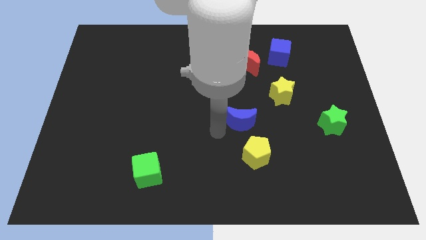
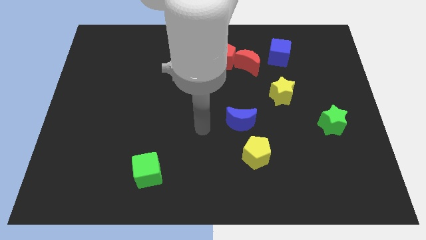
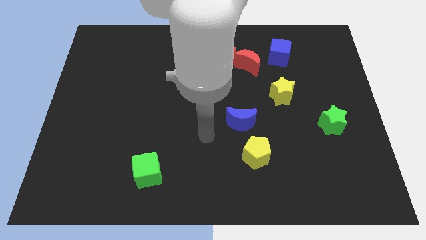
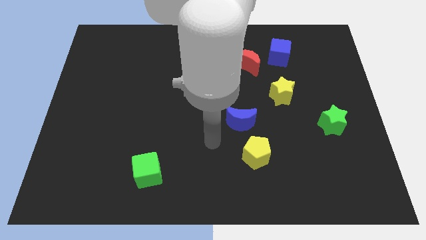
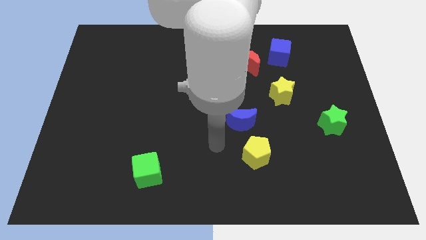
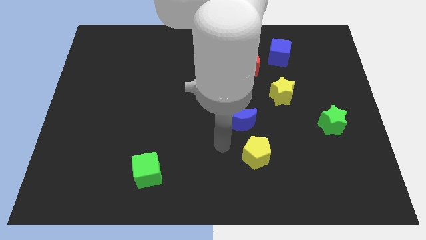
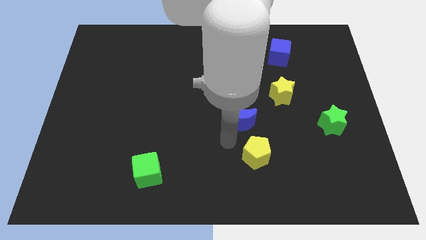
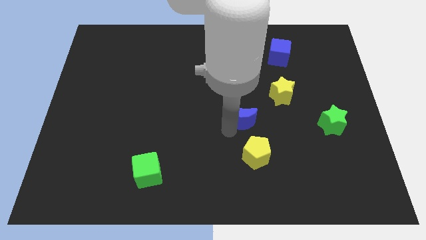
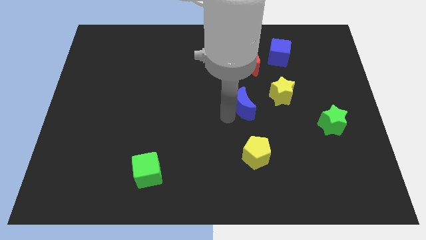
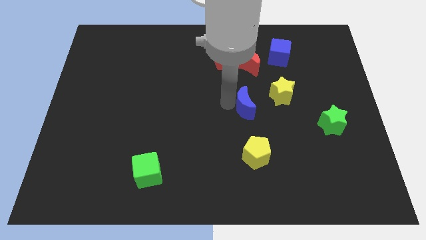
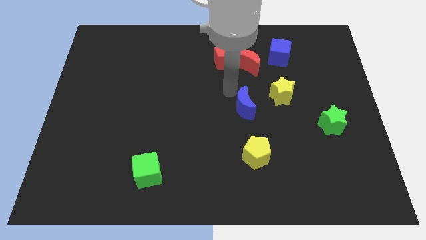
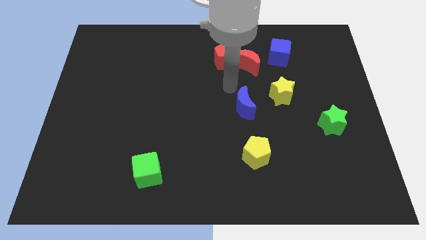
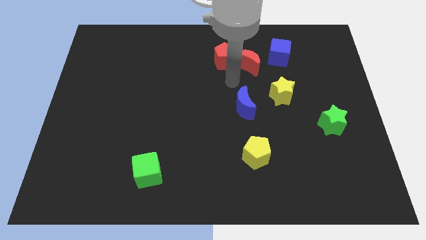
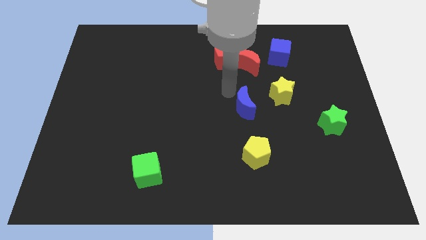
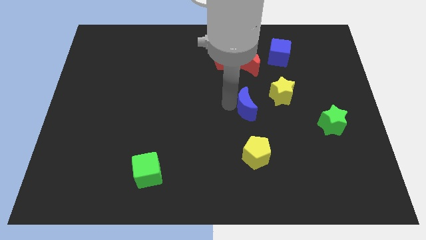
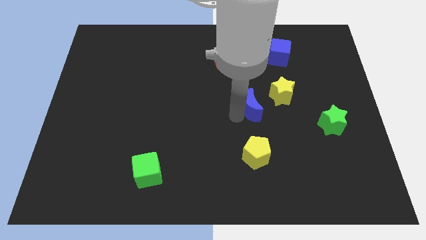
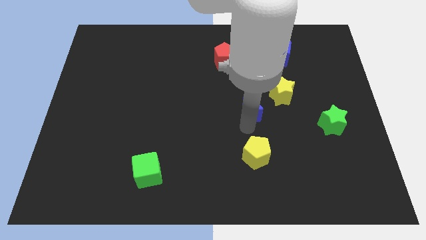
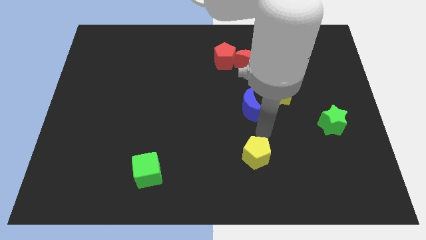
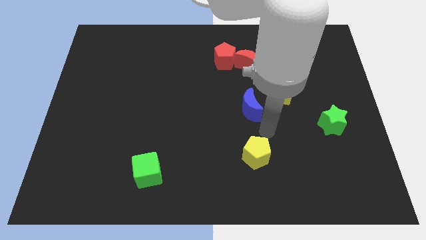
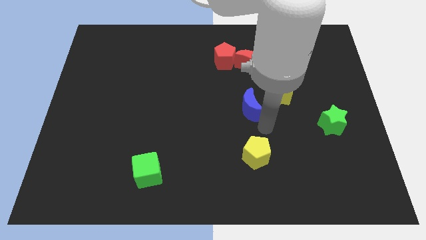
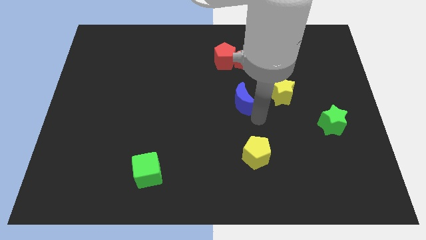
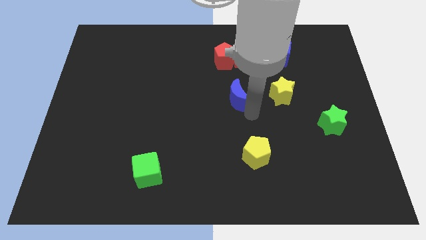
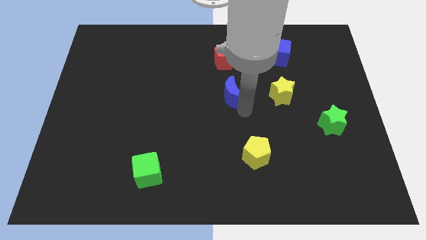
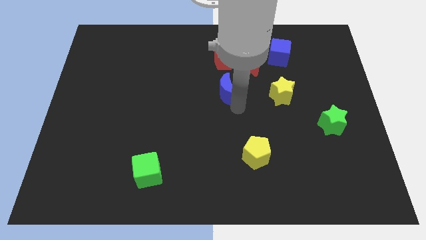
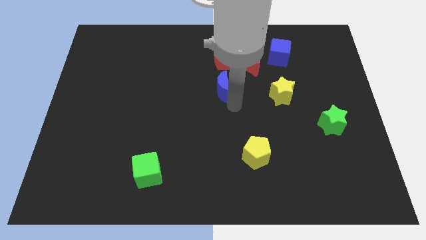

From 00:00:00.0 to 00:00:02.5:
move the blue cube towards upside

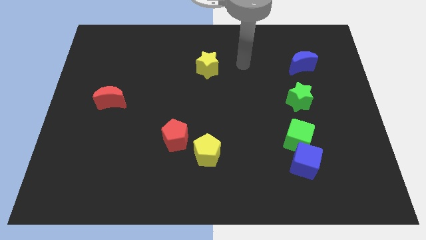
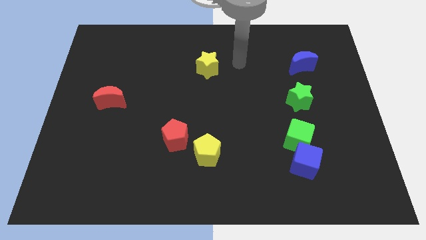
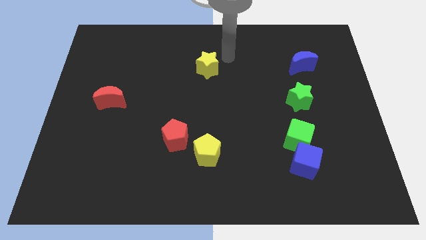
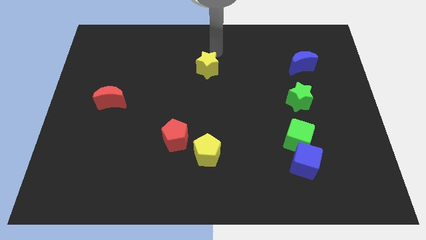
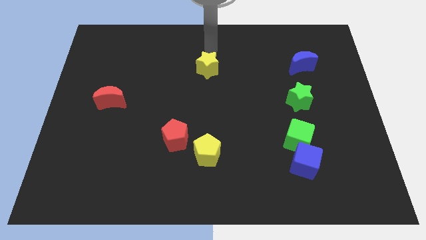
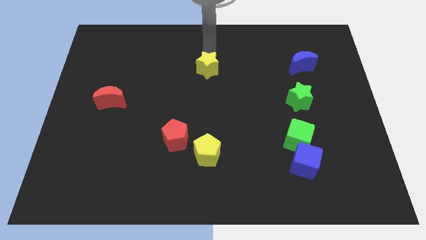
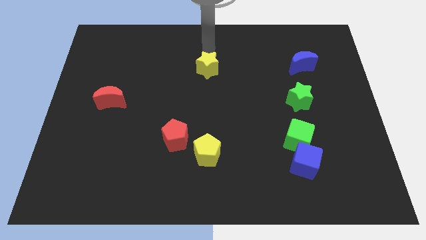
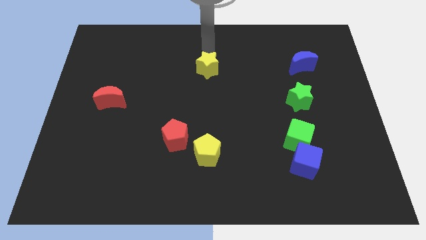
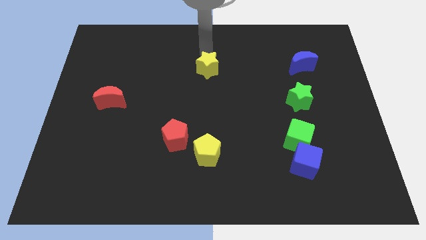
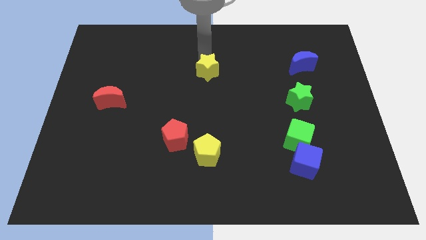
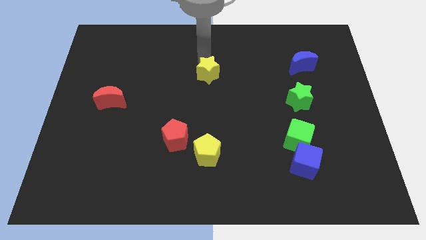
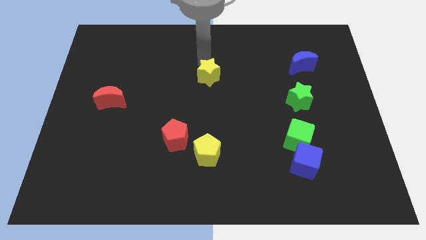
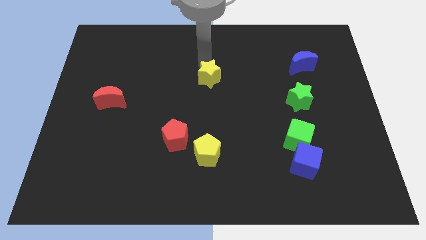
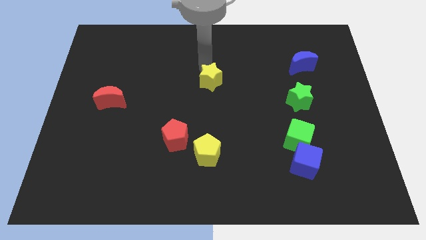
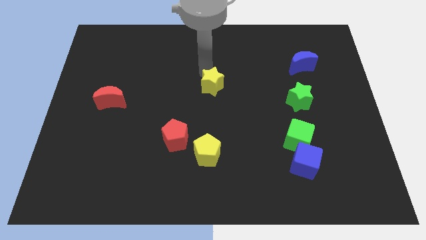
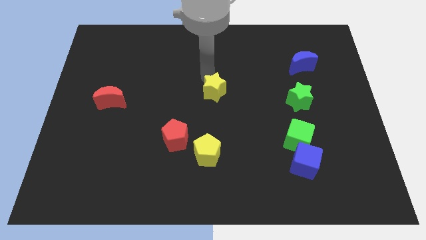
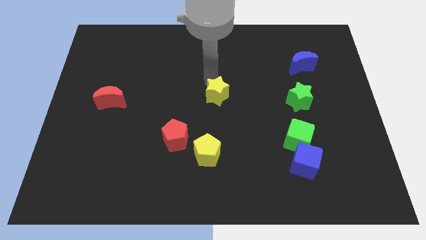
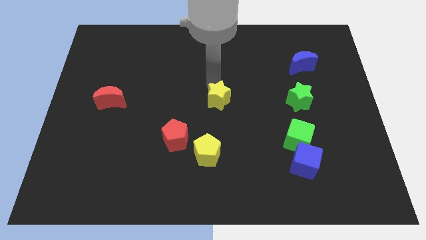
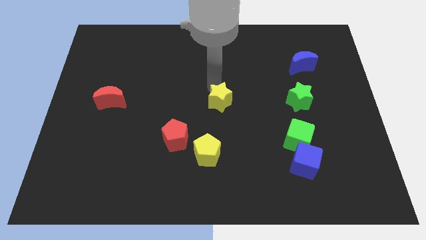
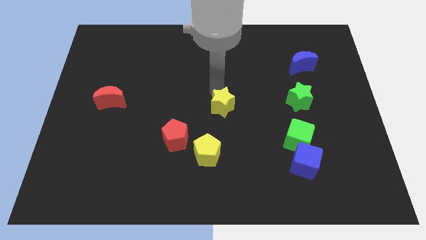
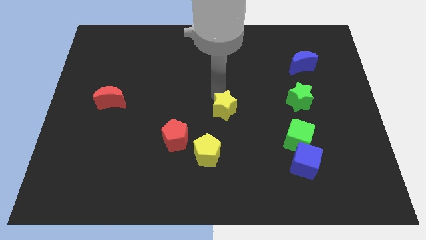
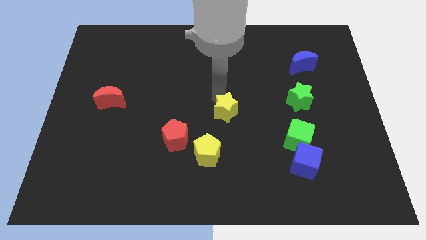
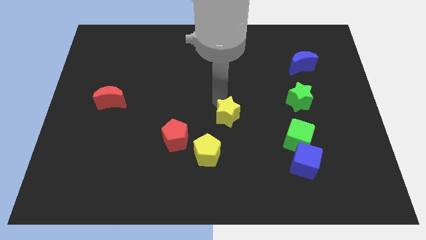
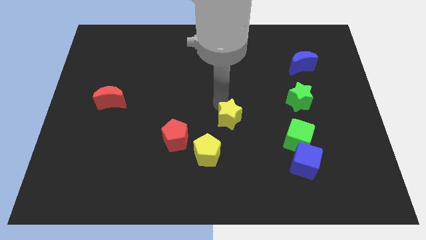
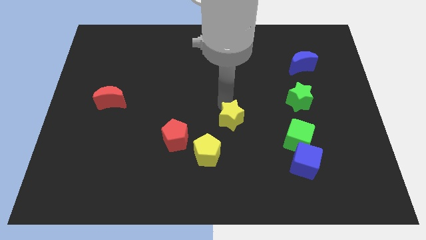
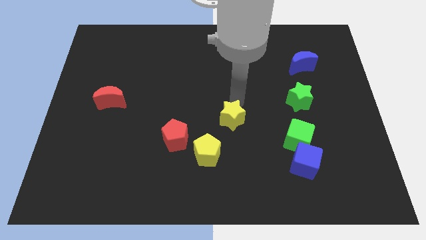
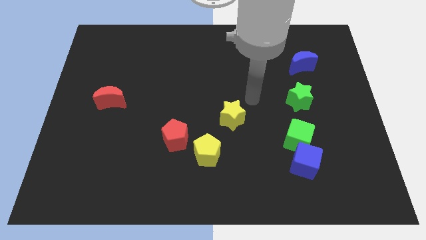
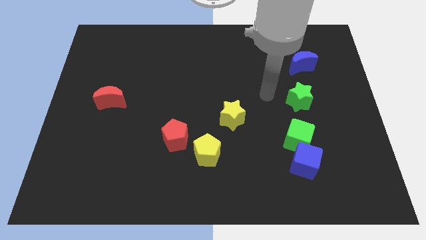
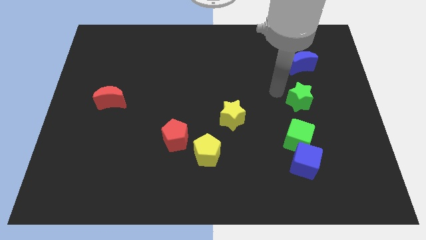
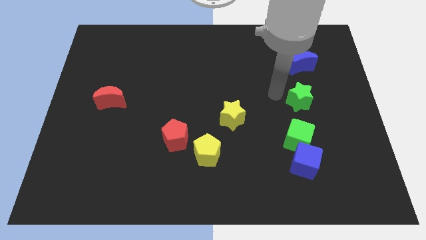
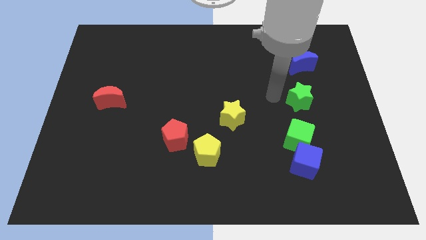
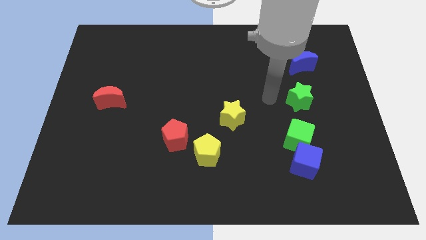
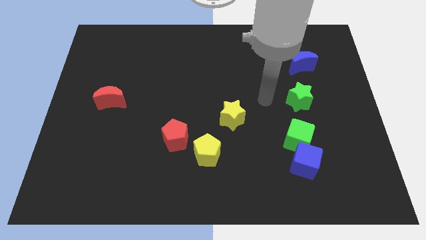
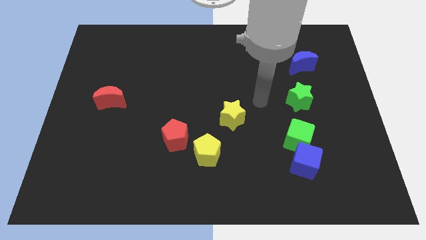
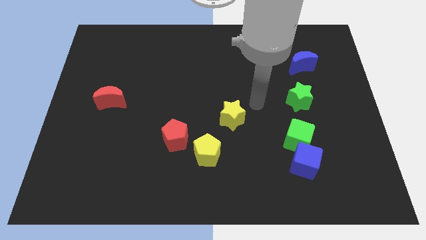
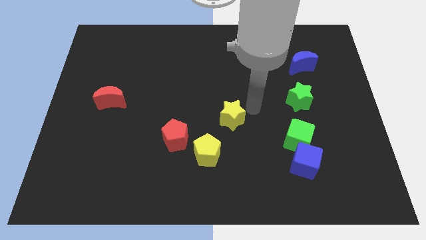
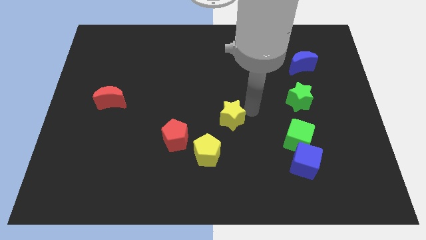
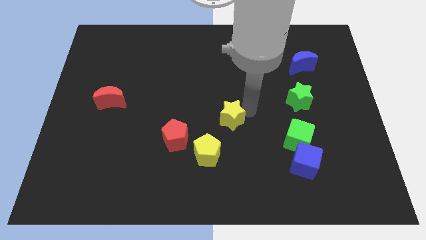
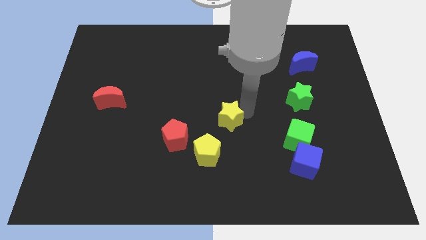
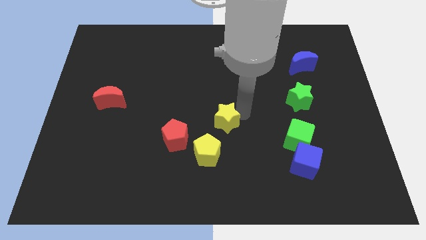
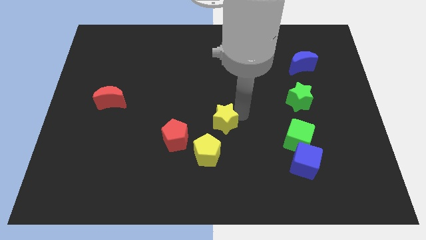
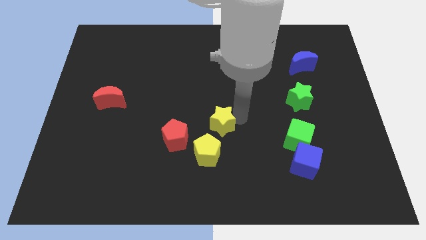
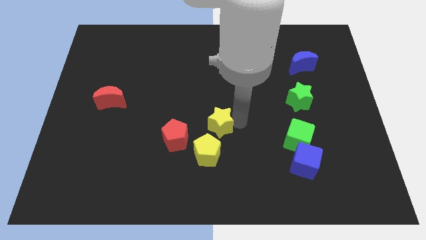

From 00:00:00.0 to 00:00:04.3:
move the yellow star diagonally top right to yellow pentagon

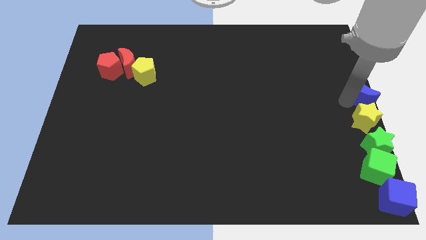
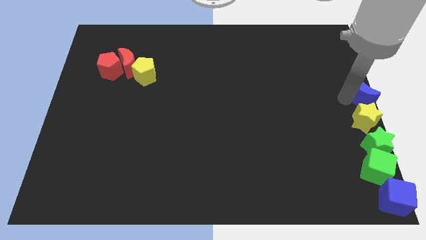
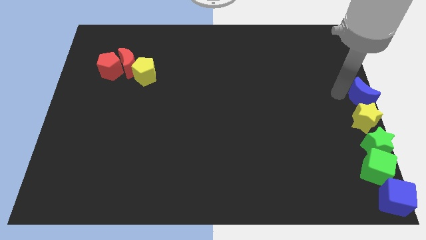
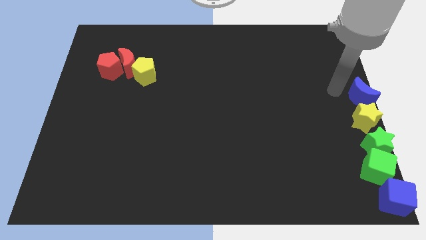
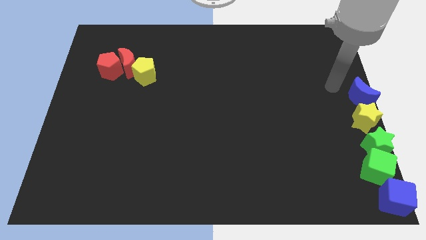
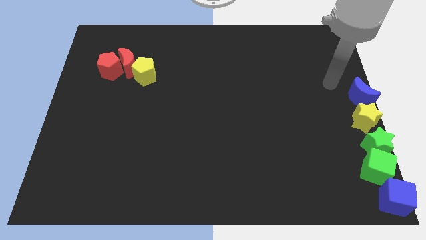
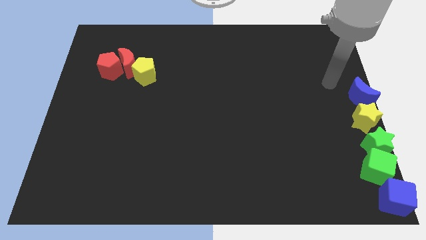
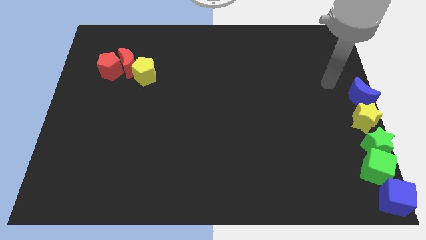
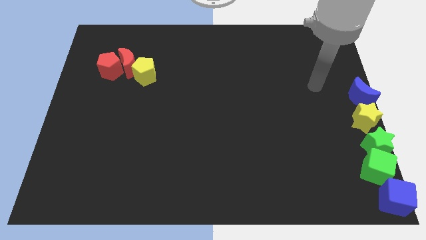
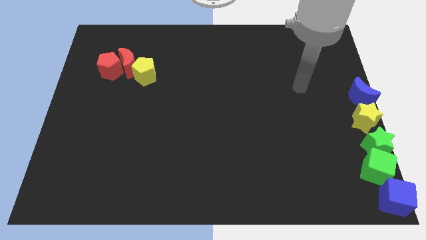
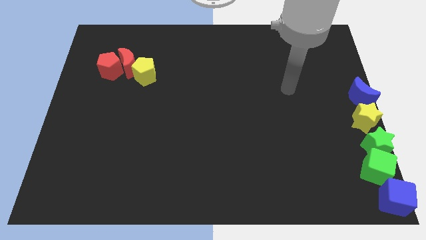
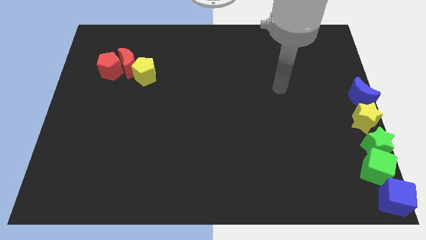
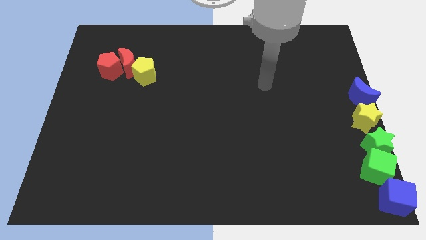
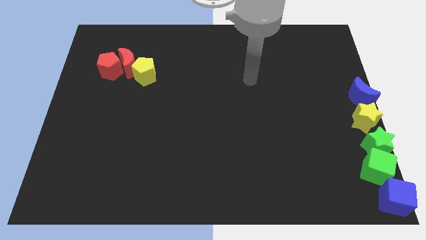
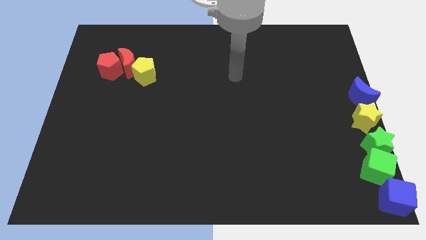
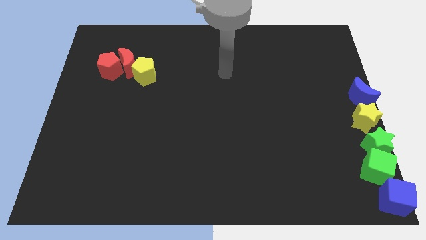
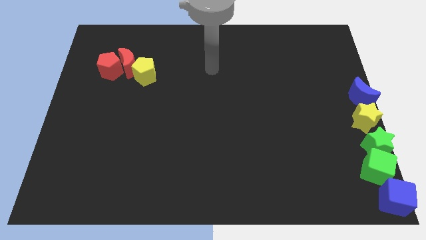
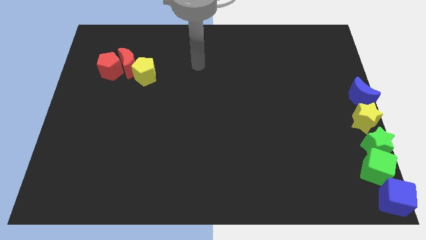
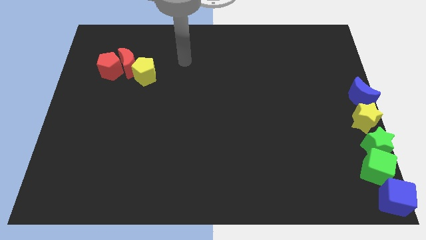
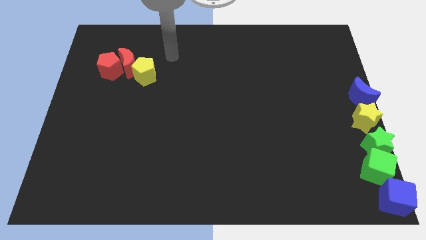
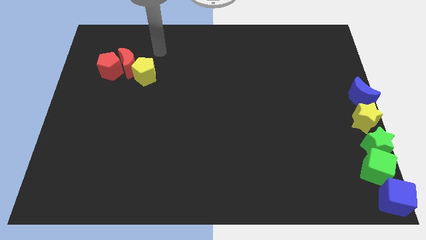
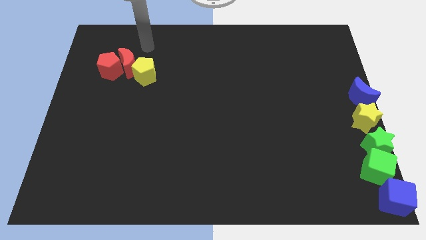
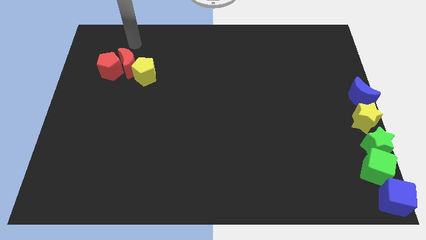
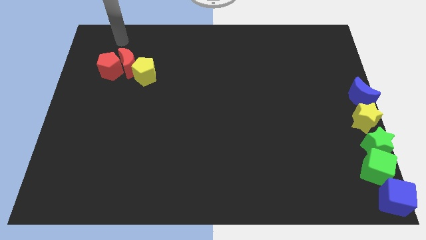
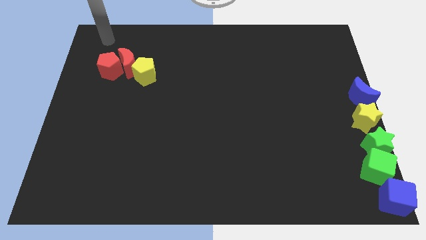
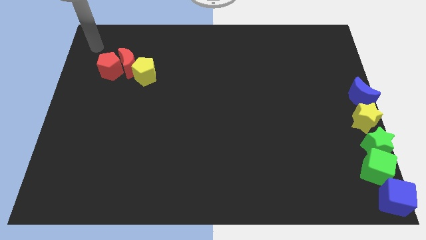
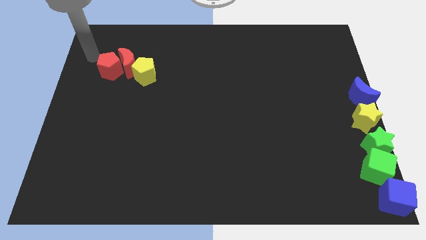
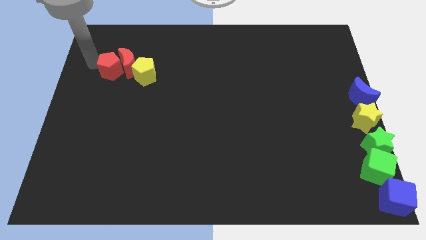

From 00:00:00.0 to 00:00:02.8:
move your arm to the top left corner of the board
